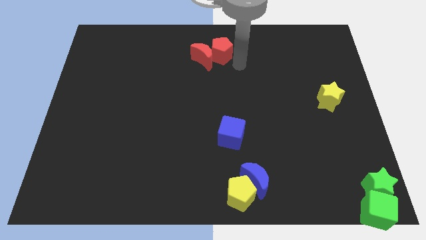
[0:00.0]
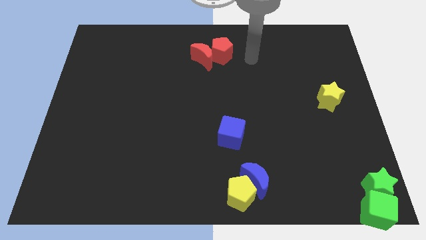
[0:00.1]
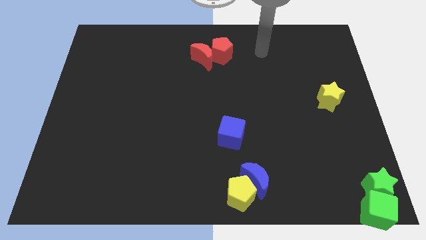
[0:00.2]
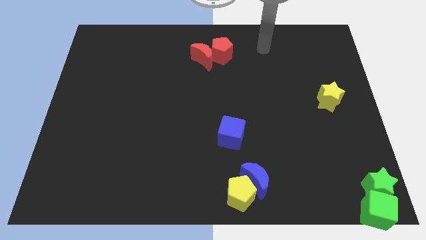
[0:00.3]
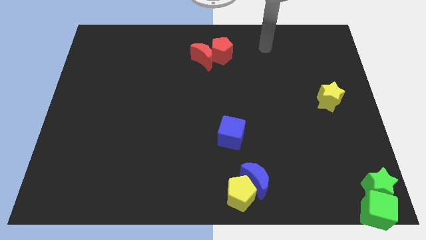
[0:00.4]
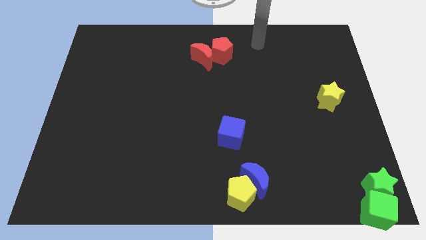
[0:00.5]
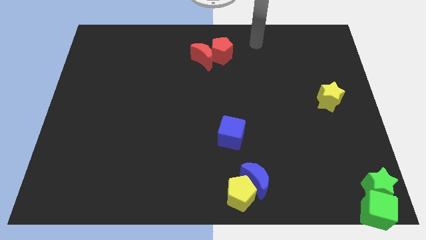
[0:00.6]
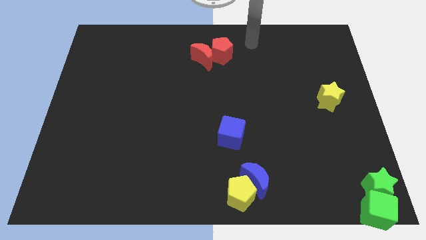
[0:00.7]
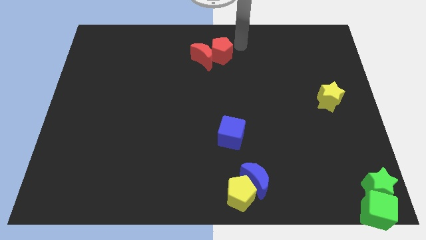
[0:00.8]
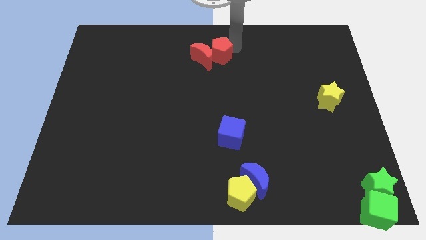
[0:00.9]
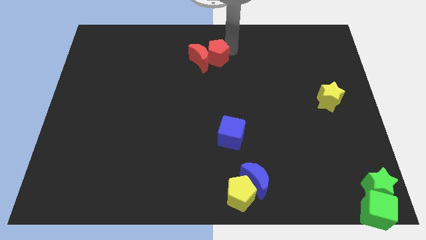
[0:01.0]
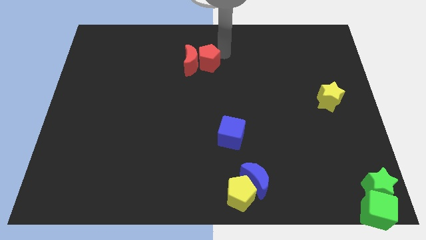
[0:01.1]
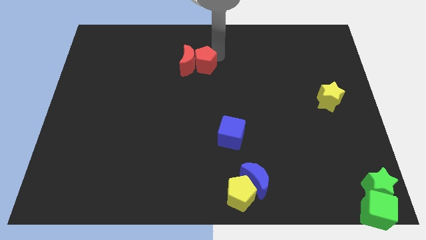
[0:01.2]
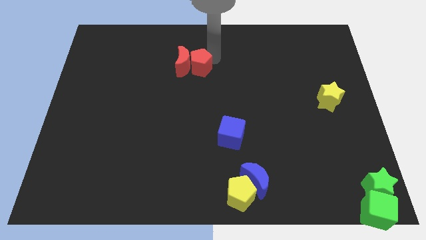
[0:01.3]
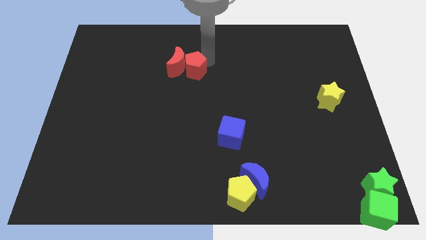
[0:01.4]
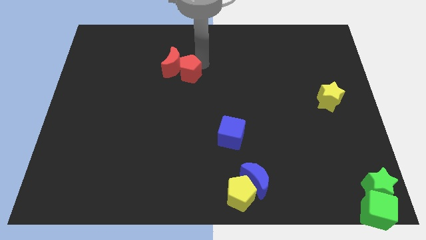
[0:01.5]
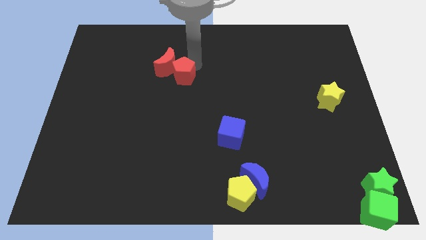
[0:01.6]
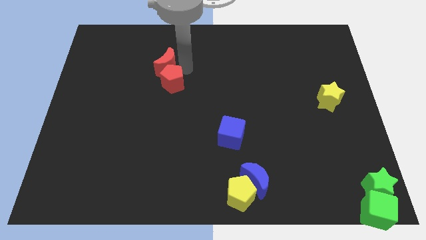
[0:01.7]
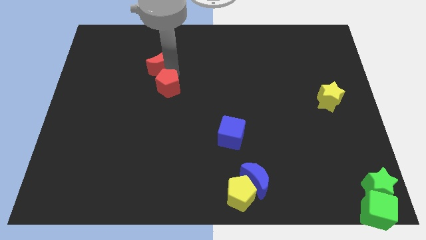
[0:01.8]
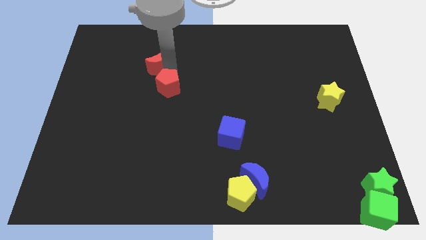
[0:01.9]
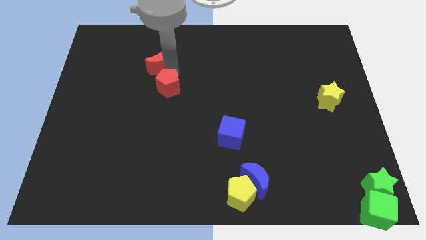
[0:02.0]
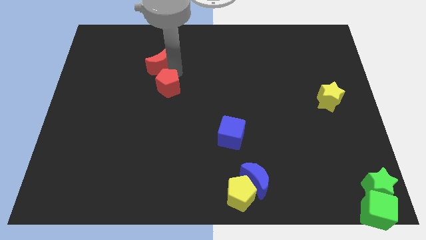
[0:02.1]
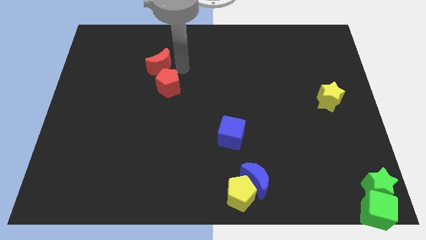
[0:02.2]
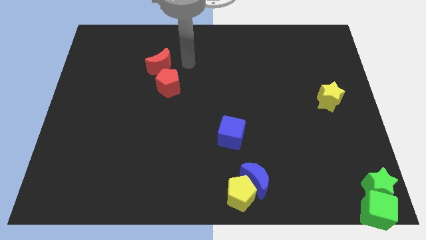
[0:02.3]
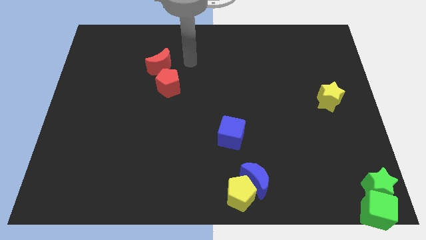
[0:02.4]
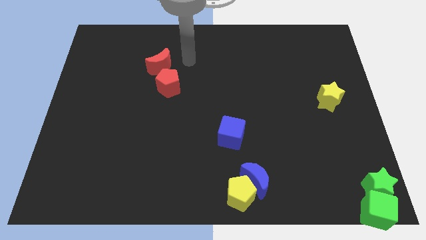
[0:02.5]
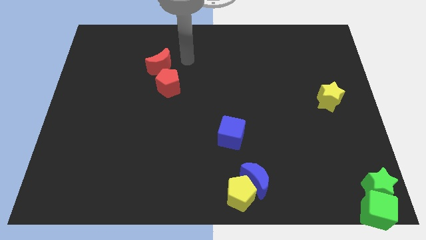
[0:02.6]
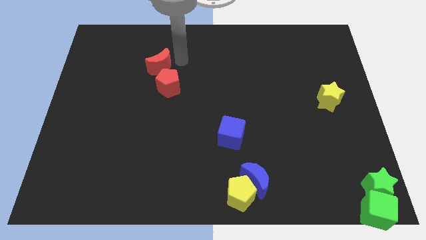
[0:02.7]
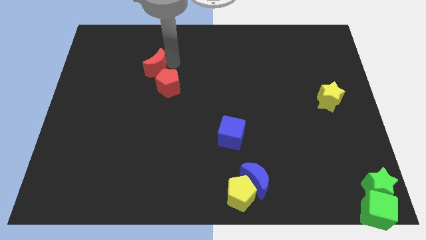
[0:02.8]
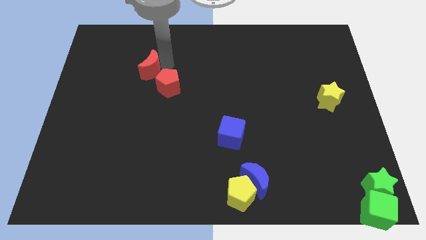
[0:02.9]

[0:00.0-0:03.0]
move red pentagon and red crescent slightly towards bottom left

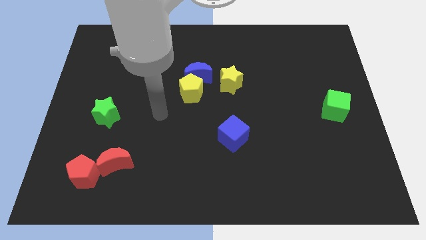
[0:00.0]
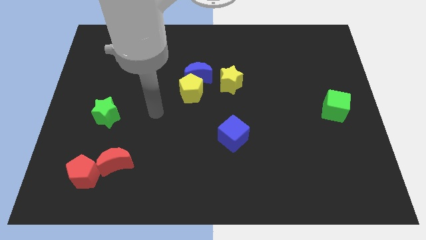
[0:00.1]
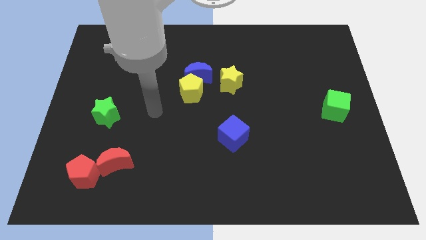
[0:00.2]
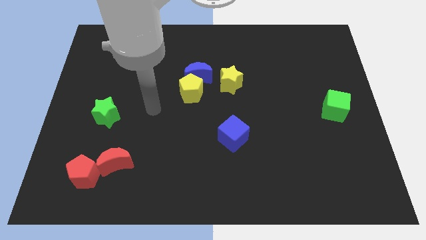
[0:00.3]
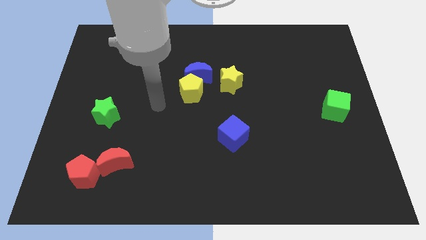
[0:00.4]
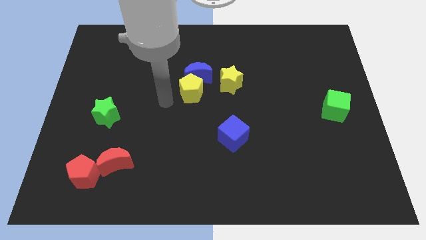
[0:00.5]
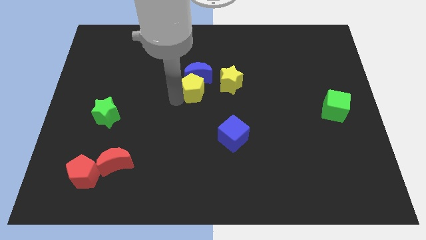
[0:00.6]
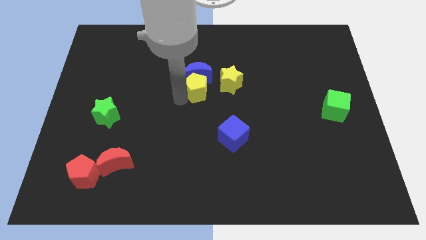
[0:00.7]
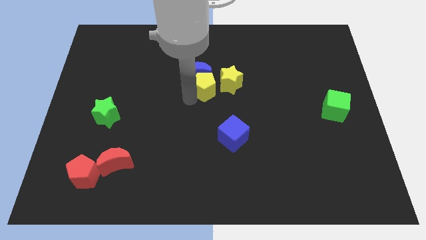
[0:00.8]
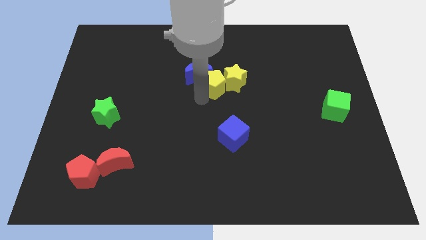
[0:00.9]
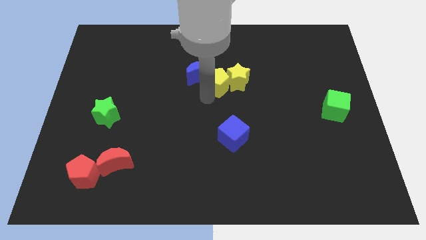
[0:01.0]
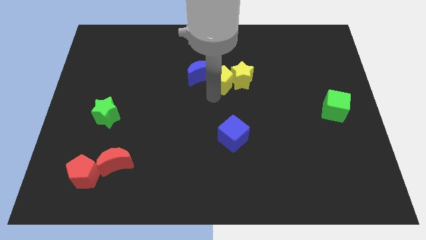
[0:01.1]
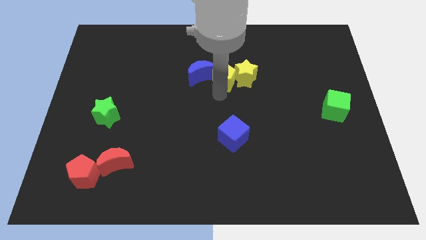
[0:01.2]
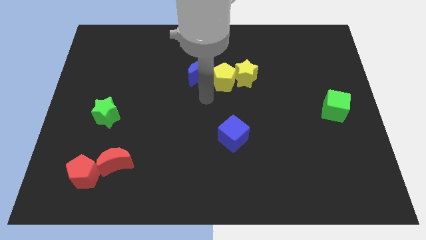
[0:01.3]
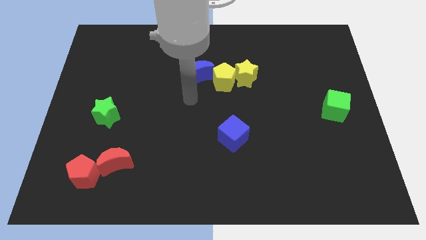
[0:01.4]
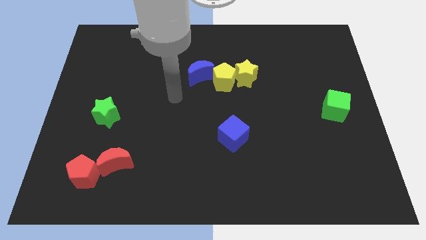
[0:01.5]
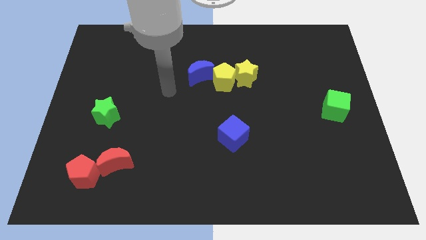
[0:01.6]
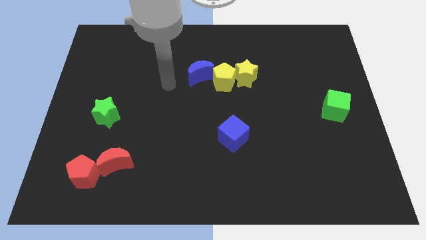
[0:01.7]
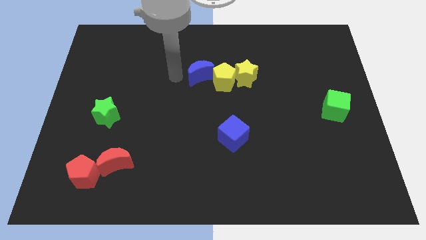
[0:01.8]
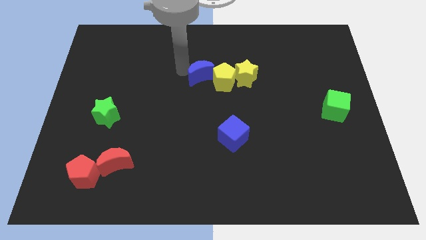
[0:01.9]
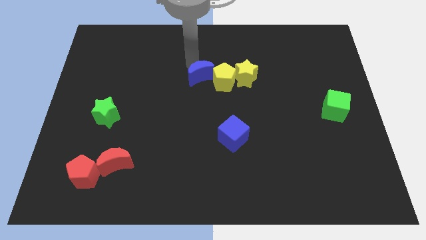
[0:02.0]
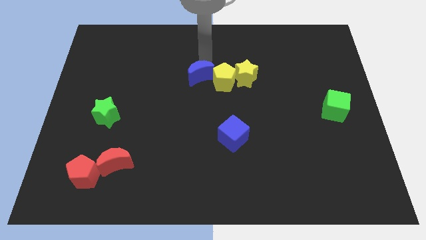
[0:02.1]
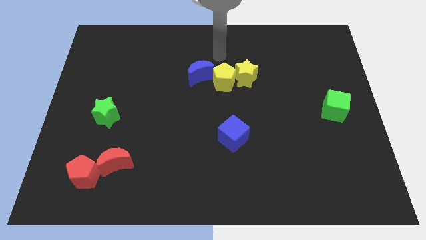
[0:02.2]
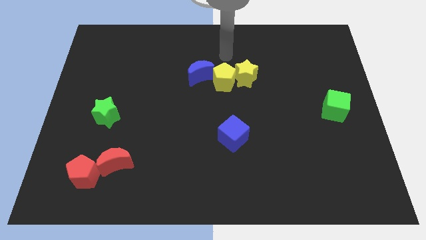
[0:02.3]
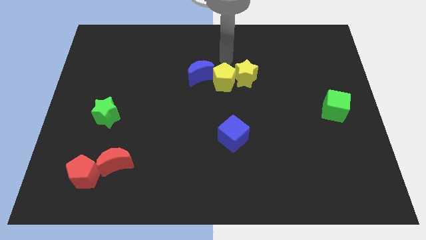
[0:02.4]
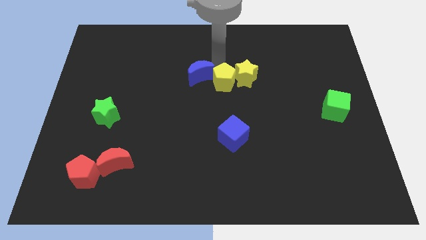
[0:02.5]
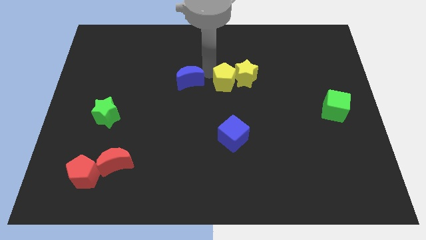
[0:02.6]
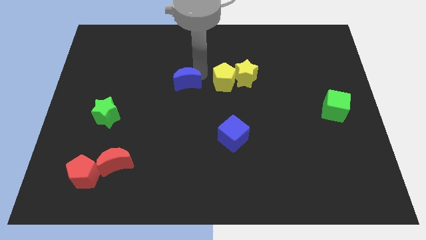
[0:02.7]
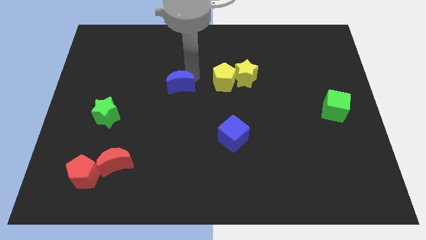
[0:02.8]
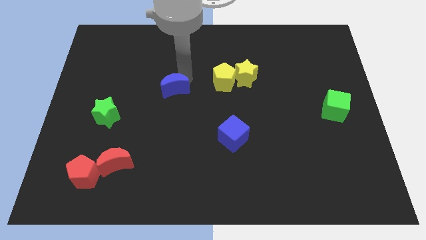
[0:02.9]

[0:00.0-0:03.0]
place the blue moon left to the yellow pentagon

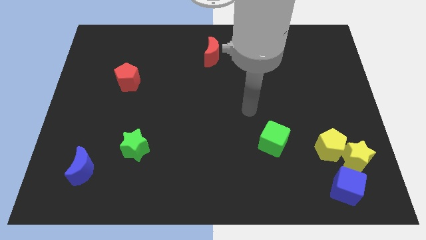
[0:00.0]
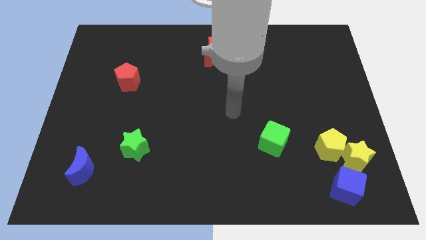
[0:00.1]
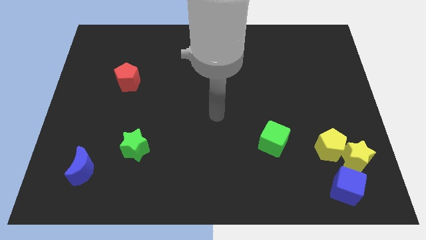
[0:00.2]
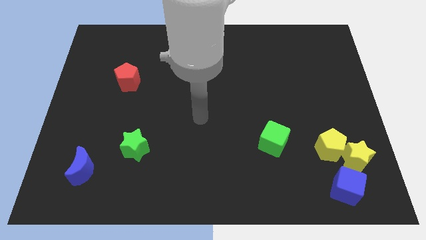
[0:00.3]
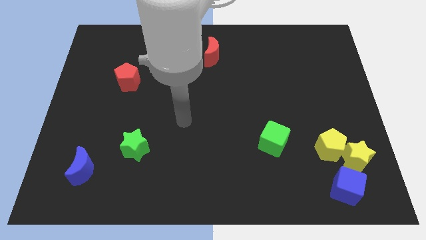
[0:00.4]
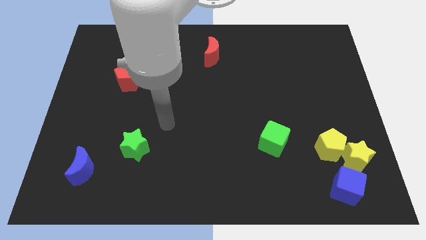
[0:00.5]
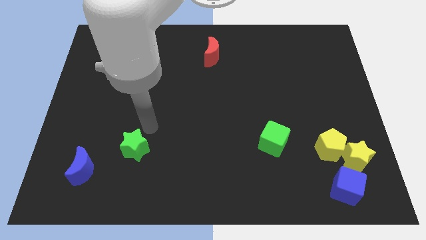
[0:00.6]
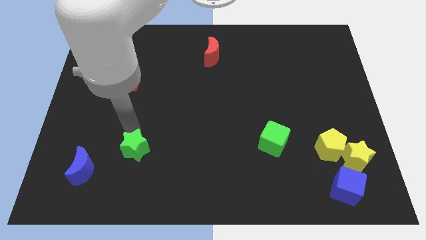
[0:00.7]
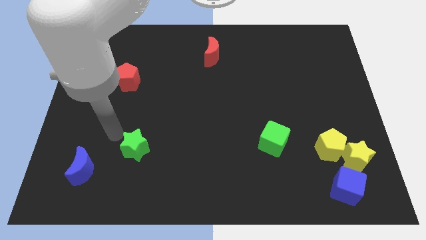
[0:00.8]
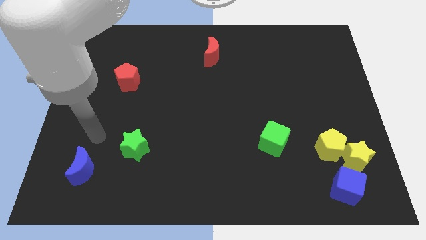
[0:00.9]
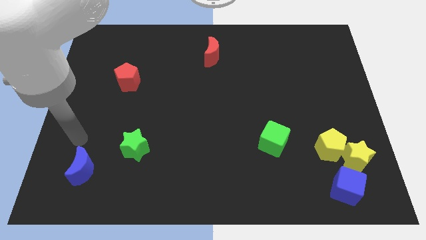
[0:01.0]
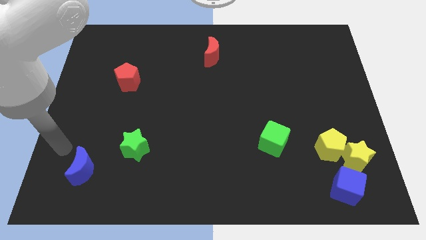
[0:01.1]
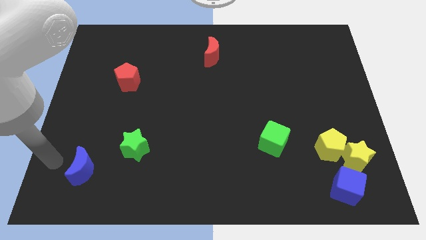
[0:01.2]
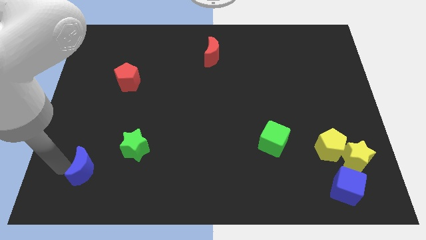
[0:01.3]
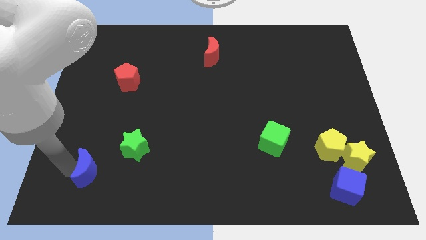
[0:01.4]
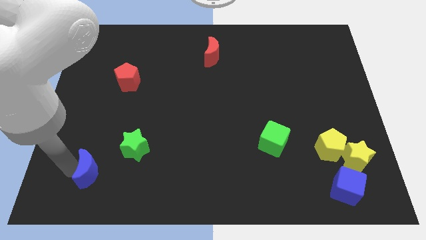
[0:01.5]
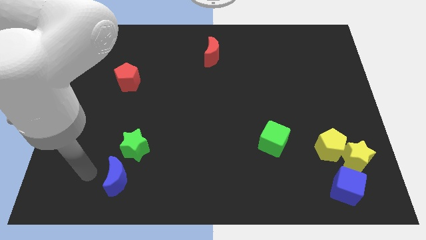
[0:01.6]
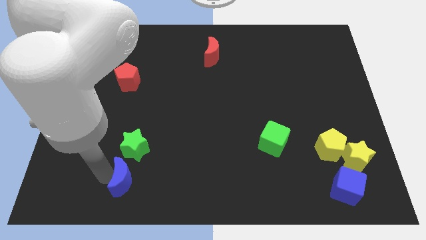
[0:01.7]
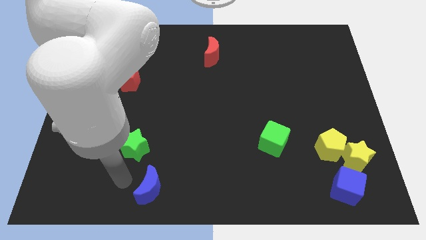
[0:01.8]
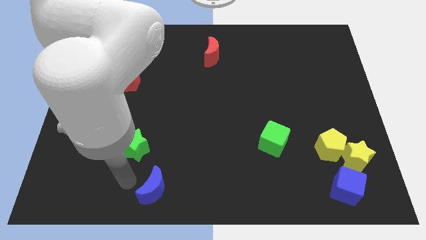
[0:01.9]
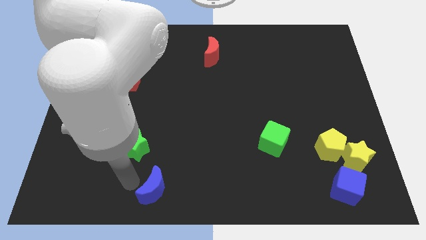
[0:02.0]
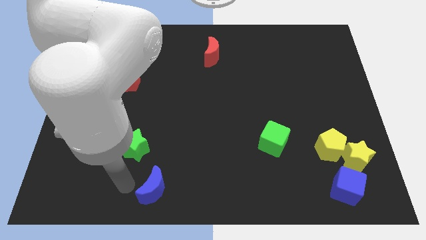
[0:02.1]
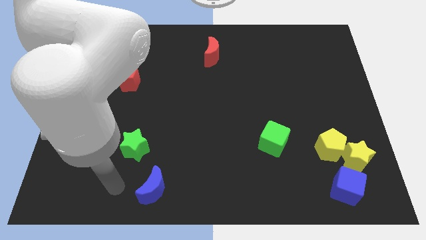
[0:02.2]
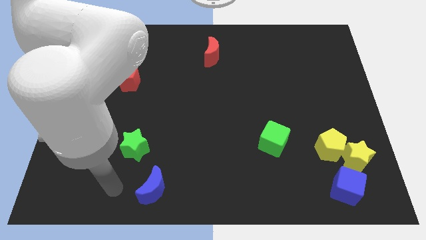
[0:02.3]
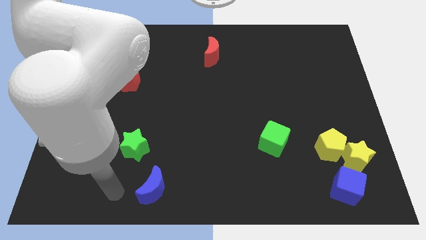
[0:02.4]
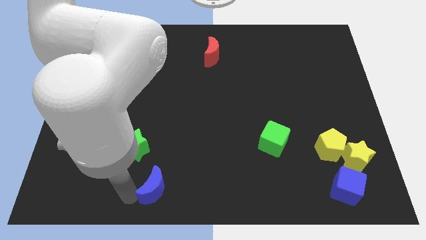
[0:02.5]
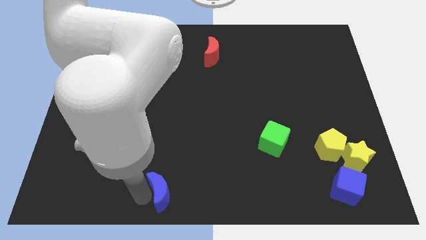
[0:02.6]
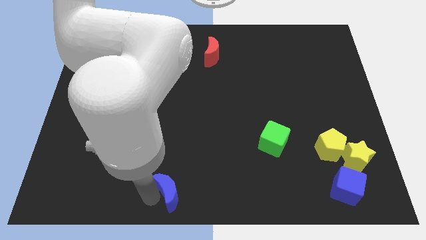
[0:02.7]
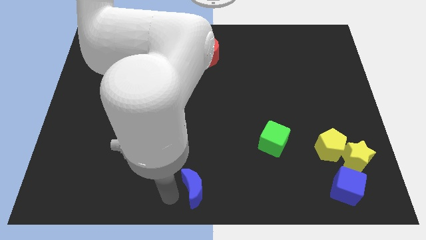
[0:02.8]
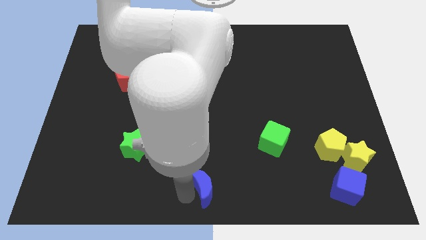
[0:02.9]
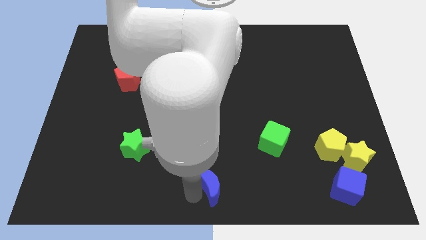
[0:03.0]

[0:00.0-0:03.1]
push the blue crescent to the bottom center of the board
